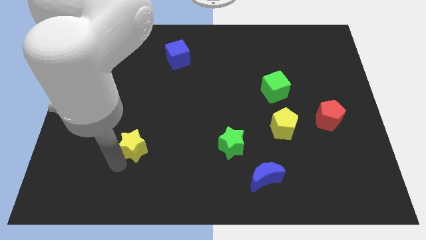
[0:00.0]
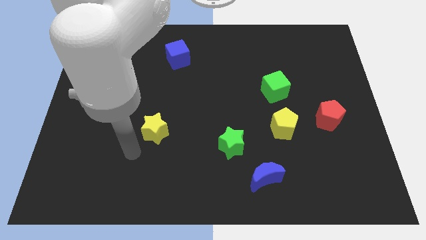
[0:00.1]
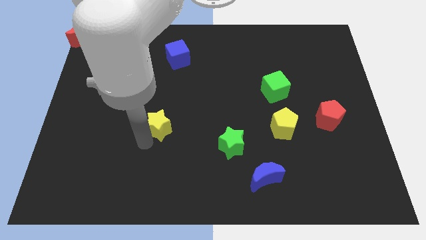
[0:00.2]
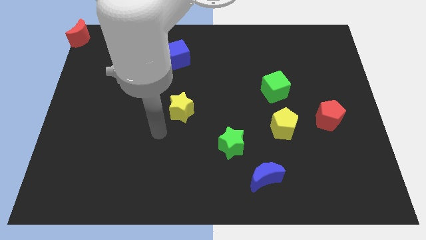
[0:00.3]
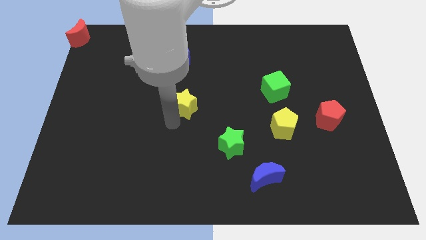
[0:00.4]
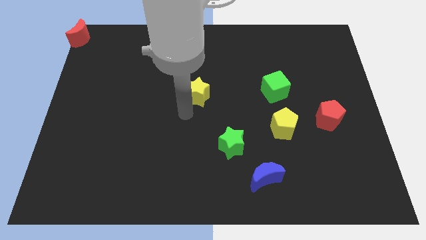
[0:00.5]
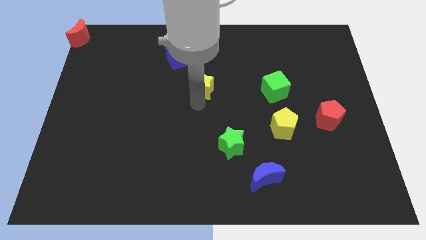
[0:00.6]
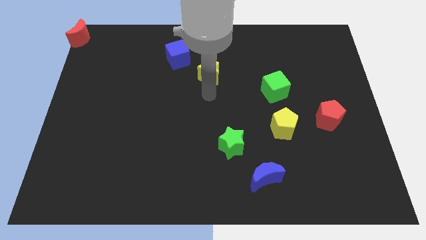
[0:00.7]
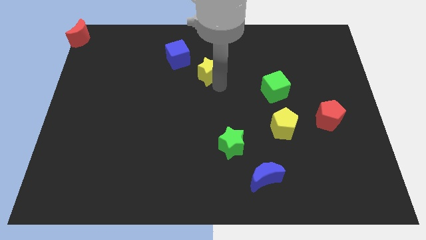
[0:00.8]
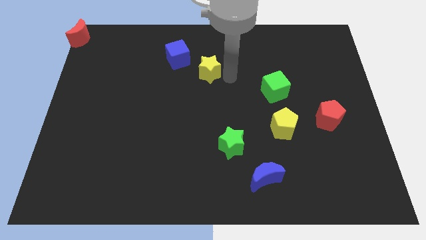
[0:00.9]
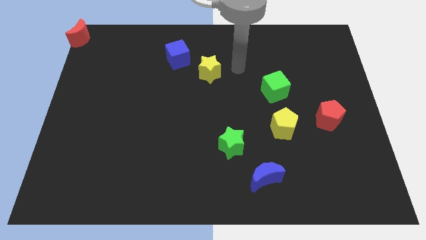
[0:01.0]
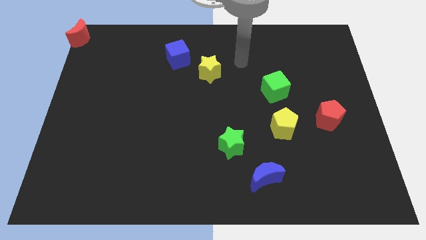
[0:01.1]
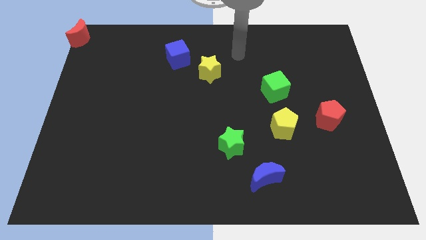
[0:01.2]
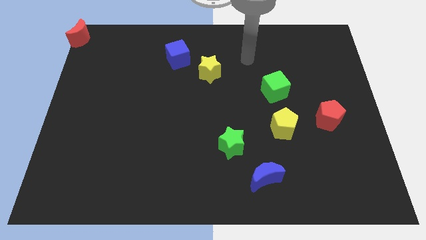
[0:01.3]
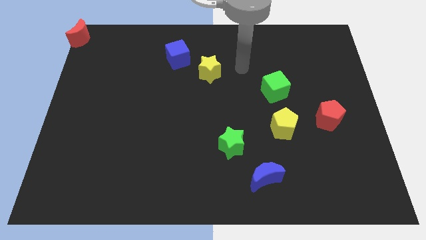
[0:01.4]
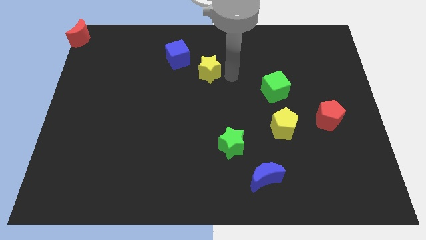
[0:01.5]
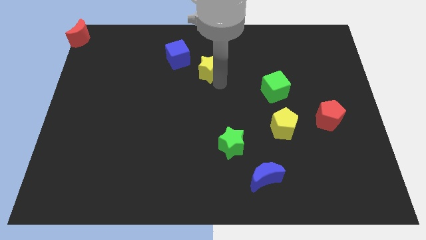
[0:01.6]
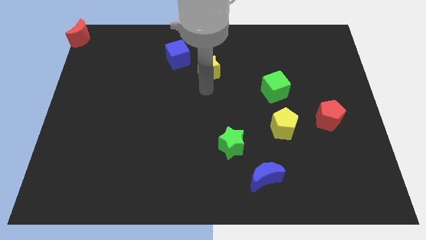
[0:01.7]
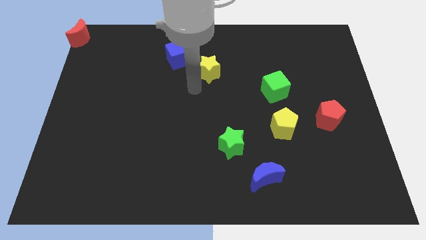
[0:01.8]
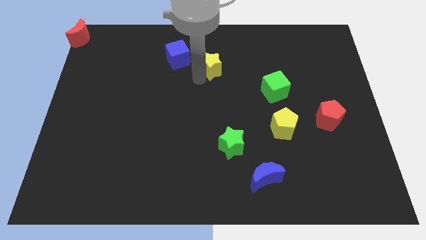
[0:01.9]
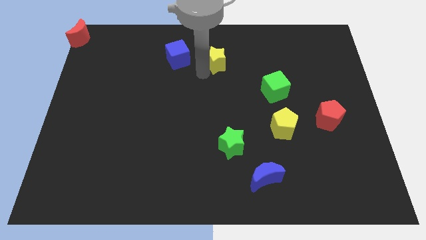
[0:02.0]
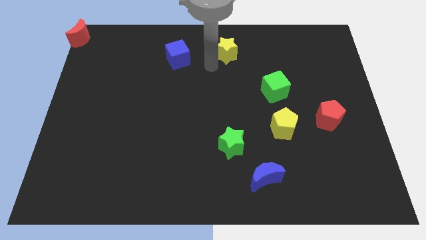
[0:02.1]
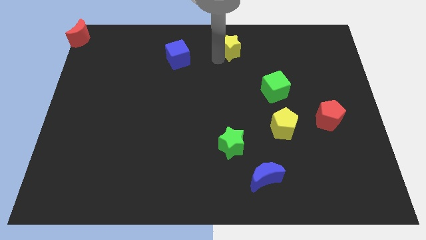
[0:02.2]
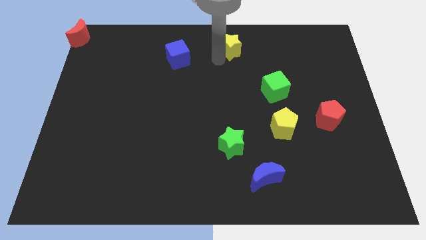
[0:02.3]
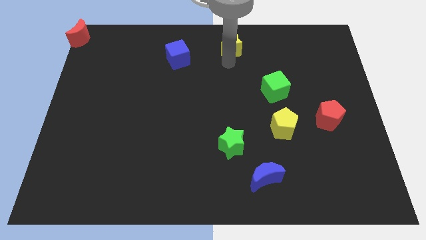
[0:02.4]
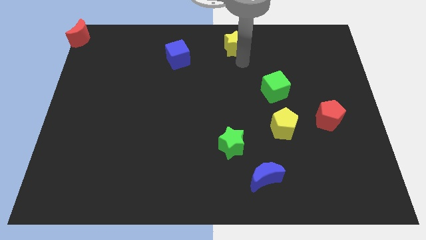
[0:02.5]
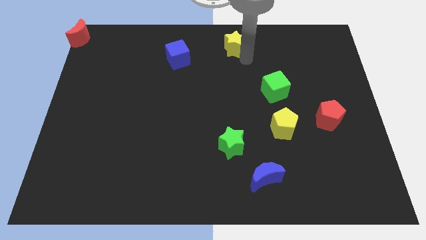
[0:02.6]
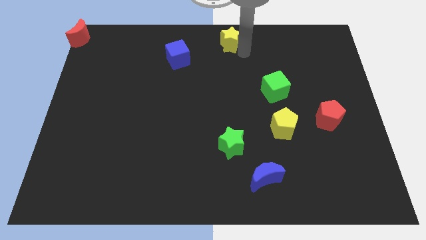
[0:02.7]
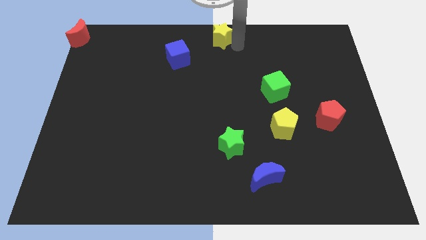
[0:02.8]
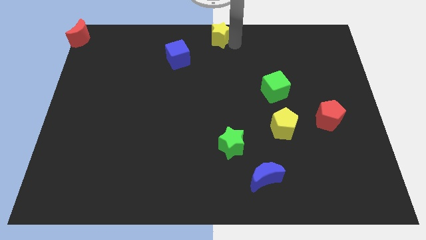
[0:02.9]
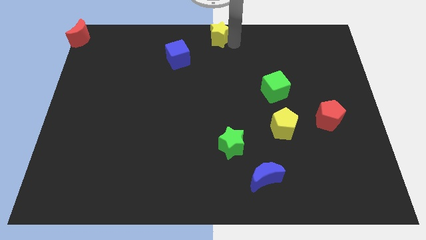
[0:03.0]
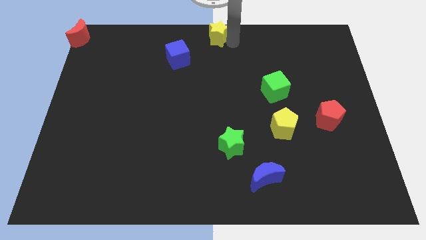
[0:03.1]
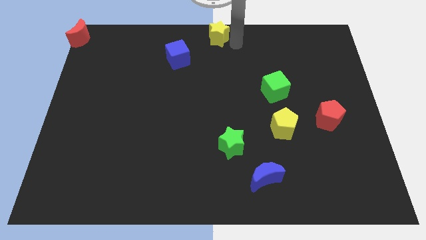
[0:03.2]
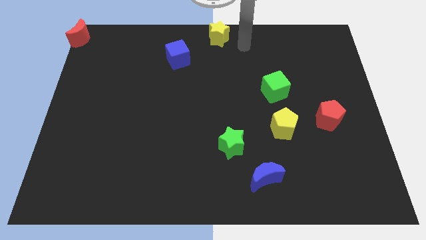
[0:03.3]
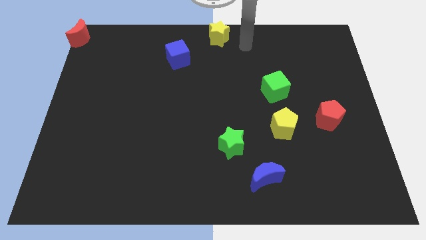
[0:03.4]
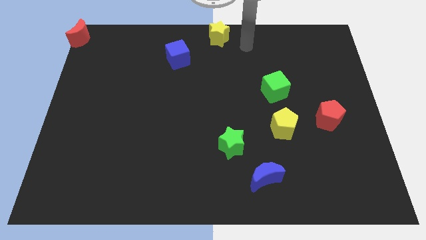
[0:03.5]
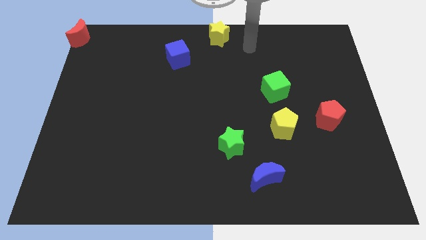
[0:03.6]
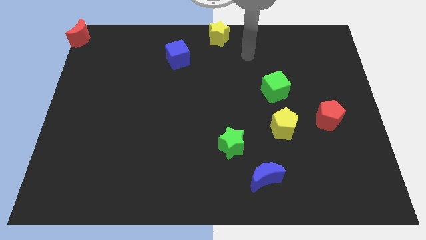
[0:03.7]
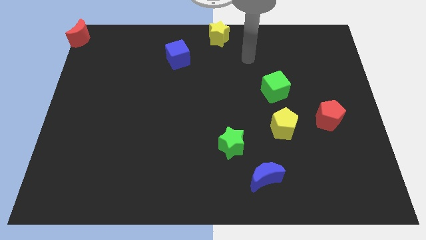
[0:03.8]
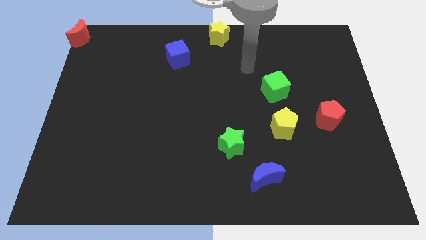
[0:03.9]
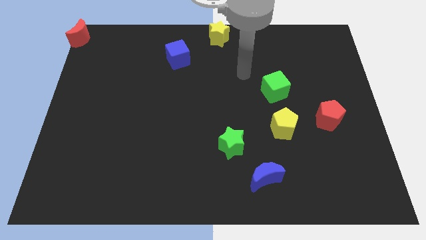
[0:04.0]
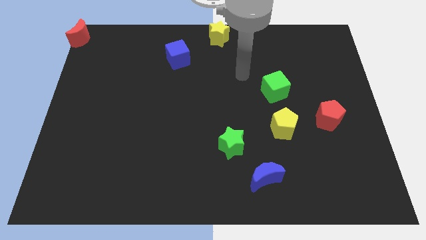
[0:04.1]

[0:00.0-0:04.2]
push the yellow star to the top center of the board

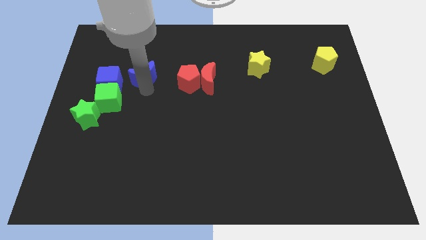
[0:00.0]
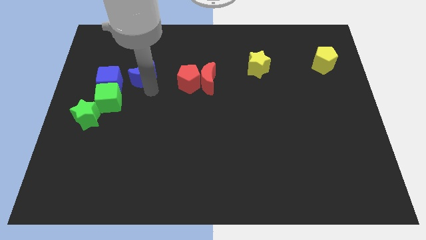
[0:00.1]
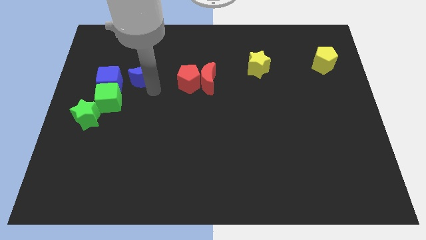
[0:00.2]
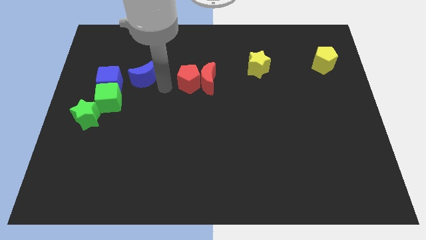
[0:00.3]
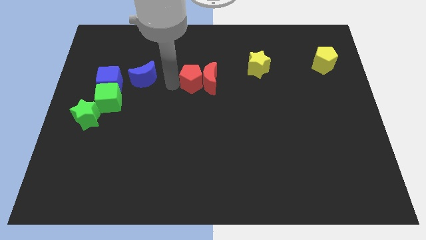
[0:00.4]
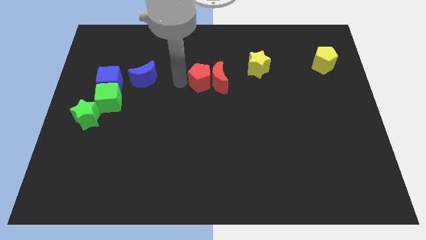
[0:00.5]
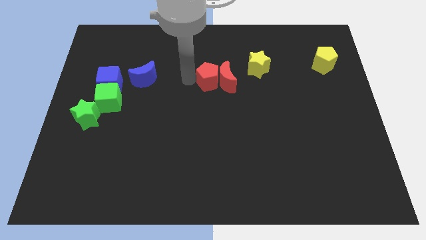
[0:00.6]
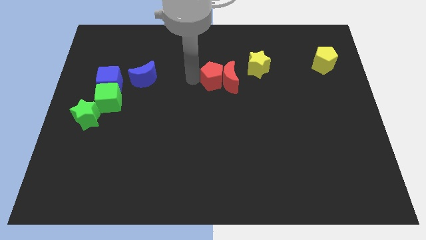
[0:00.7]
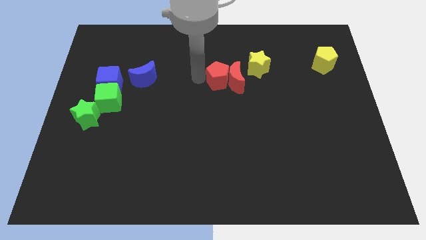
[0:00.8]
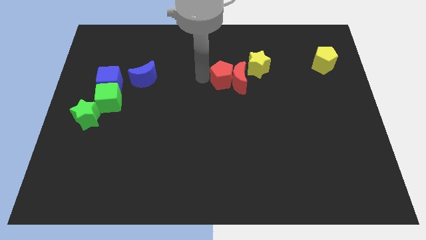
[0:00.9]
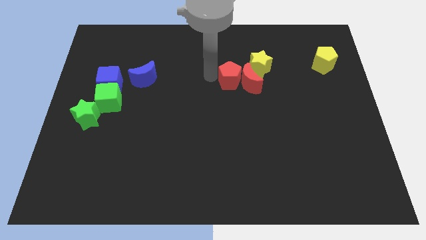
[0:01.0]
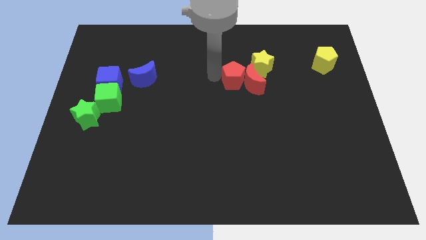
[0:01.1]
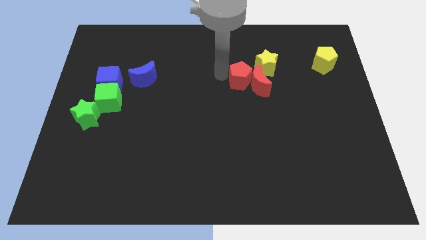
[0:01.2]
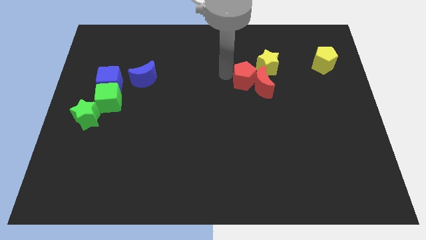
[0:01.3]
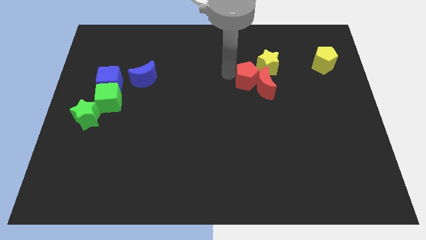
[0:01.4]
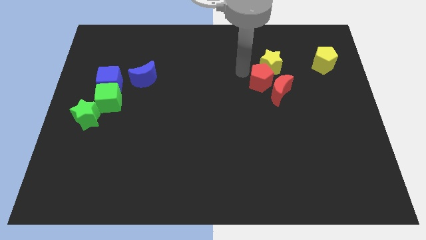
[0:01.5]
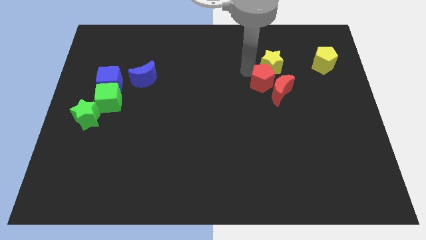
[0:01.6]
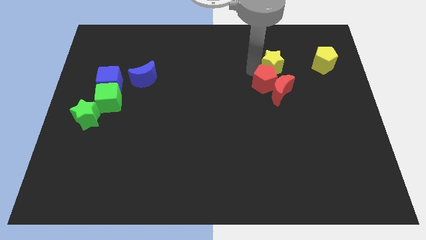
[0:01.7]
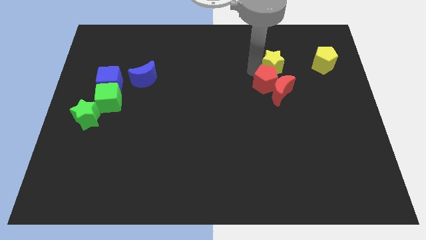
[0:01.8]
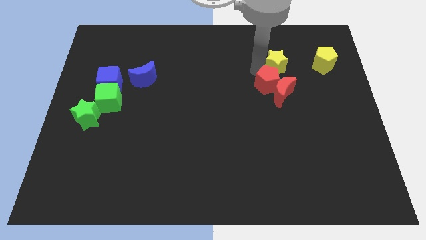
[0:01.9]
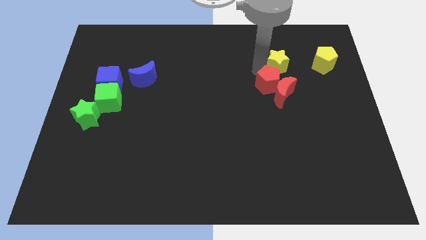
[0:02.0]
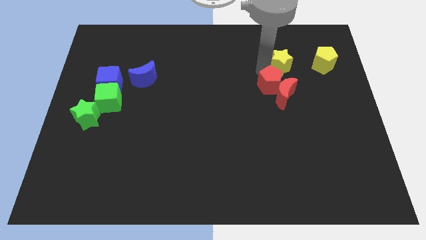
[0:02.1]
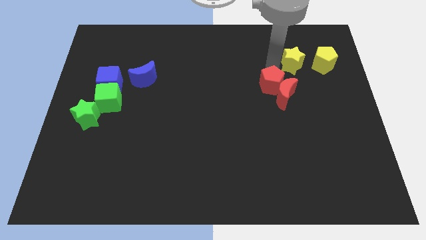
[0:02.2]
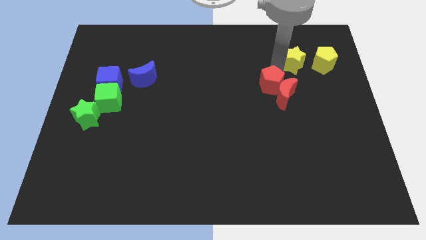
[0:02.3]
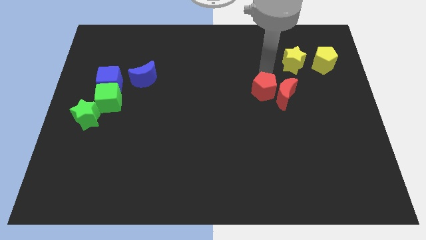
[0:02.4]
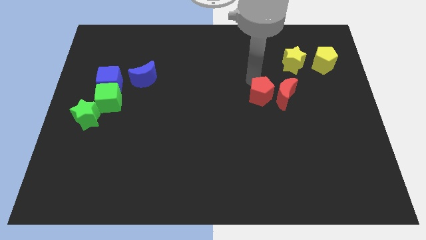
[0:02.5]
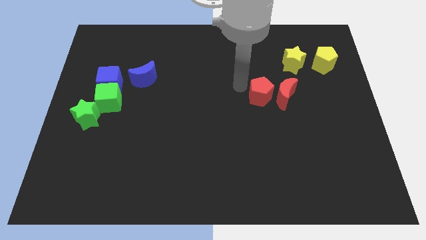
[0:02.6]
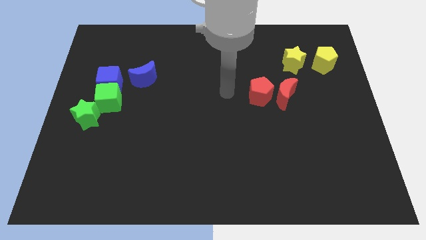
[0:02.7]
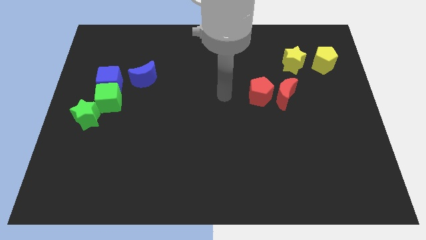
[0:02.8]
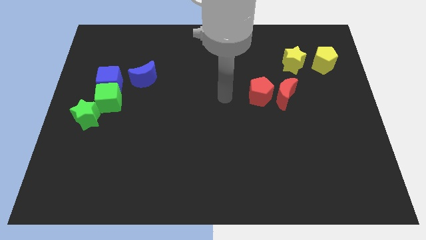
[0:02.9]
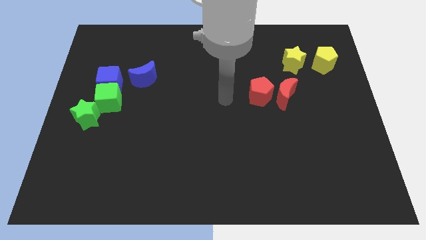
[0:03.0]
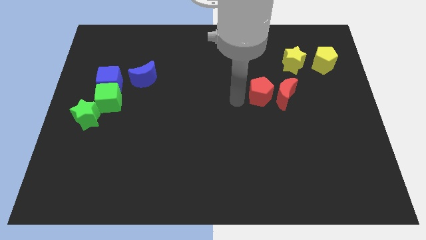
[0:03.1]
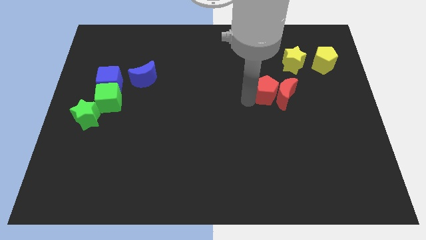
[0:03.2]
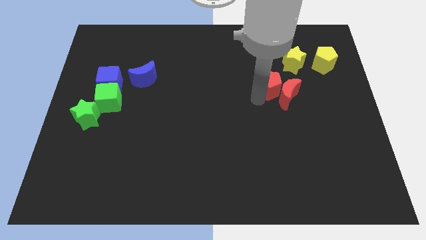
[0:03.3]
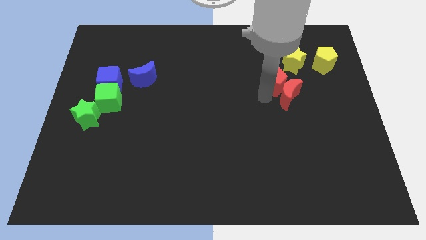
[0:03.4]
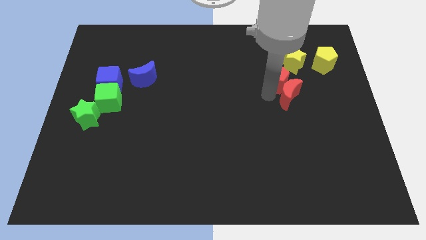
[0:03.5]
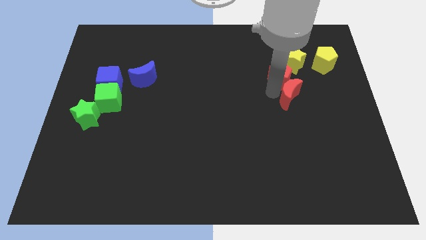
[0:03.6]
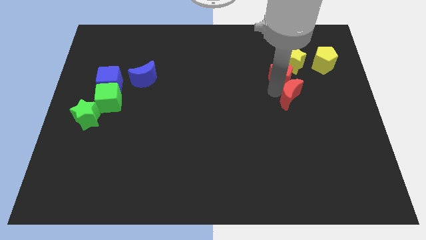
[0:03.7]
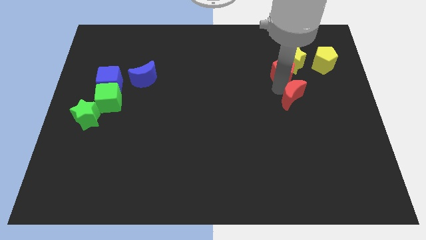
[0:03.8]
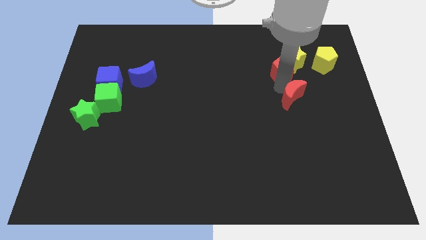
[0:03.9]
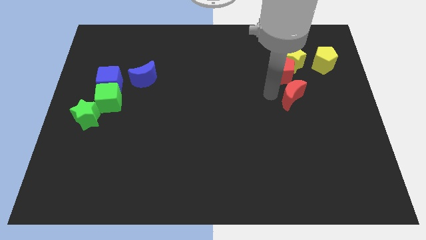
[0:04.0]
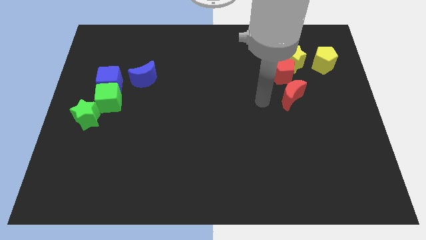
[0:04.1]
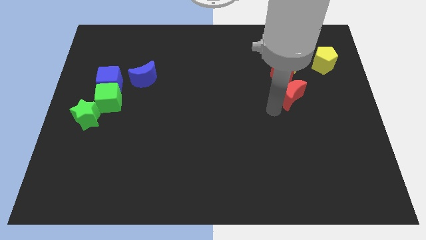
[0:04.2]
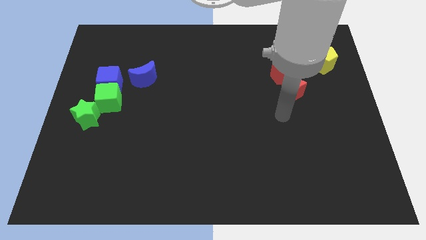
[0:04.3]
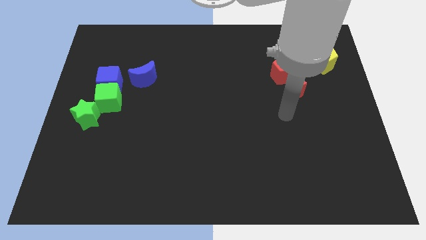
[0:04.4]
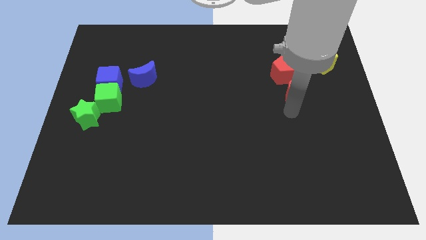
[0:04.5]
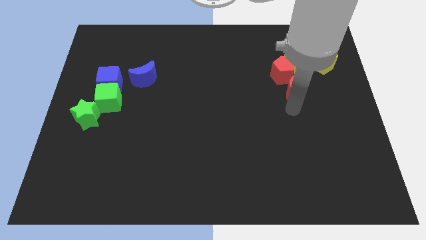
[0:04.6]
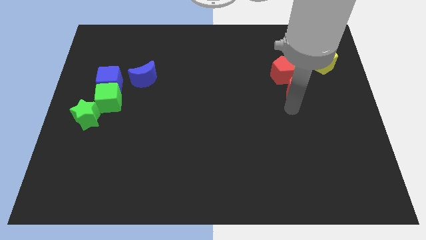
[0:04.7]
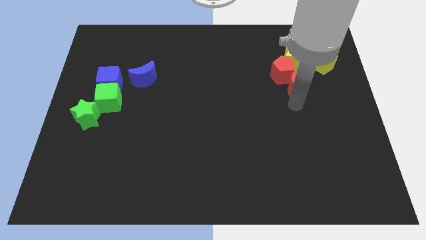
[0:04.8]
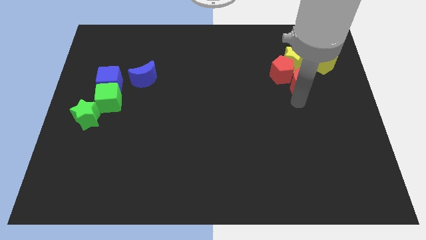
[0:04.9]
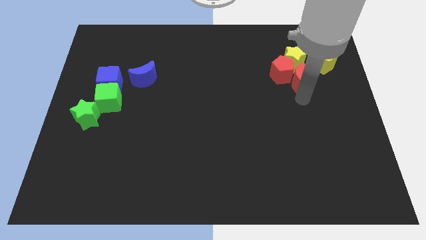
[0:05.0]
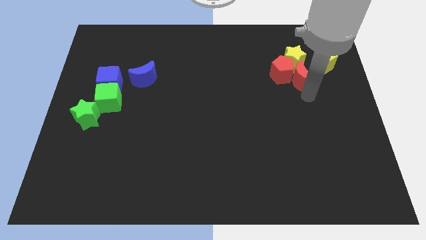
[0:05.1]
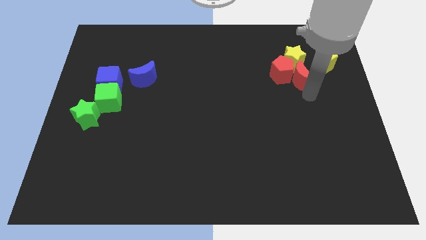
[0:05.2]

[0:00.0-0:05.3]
move the red pentagon and red crescent into the bottom side of the yellow star
